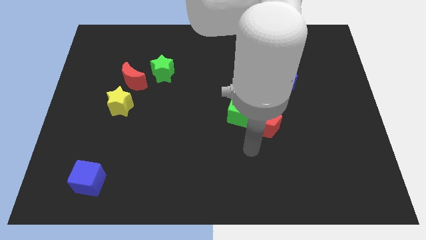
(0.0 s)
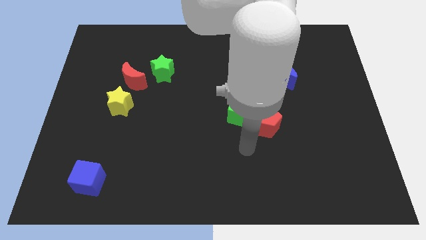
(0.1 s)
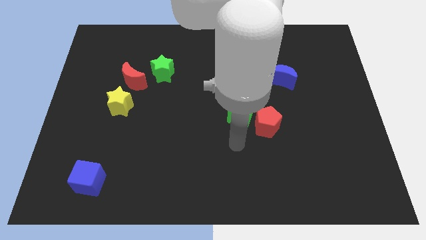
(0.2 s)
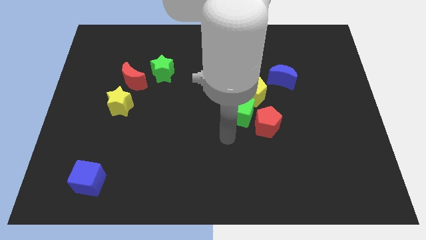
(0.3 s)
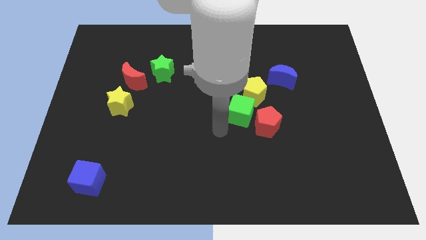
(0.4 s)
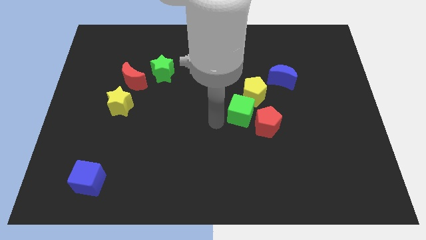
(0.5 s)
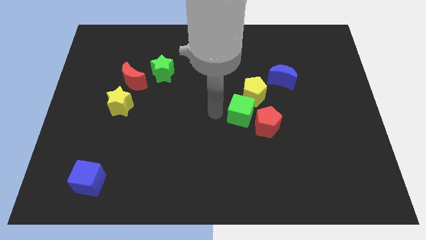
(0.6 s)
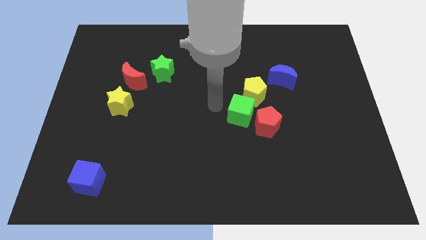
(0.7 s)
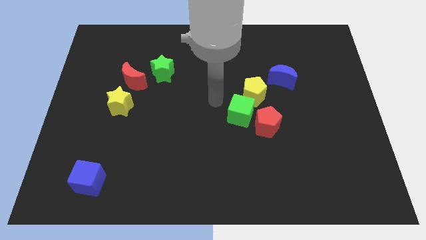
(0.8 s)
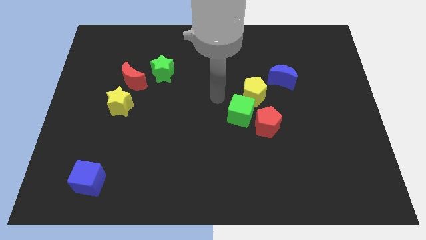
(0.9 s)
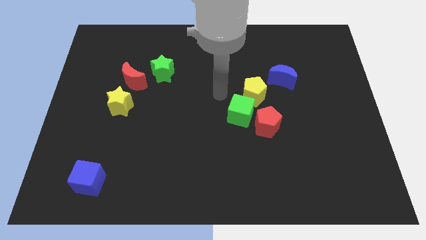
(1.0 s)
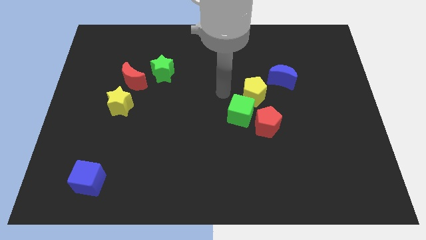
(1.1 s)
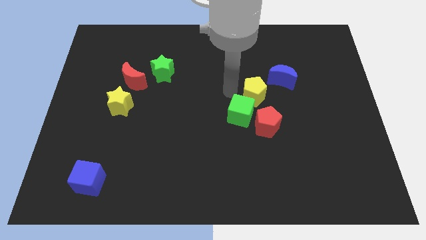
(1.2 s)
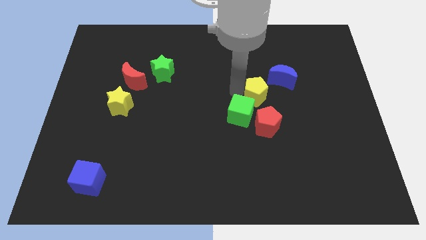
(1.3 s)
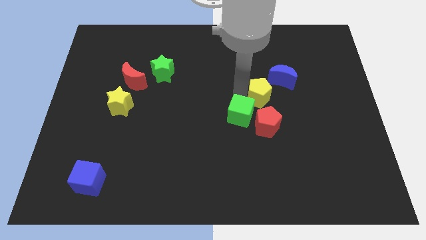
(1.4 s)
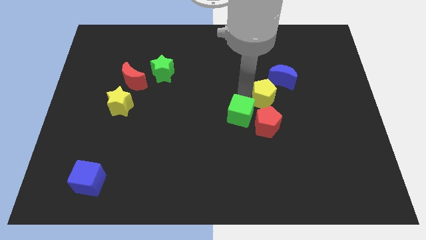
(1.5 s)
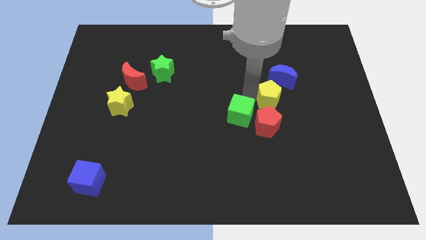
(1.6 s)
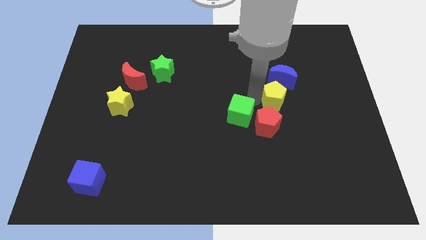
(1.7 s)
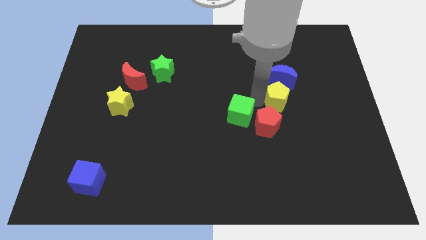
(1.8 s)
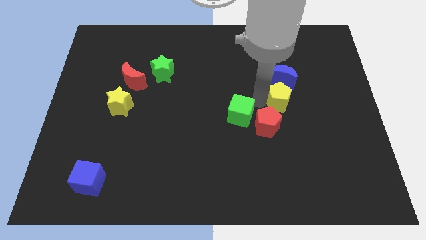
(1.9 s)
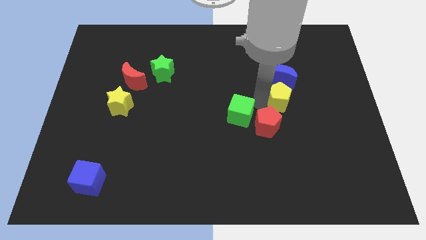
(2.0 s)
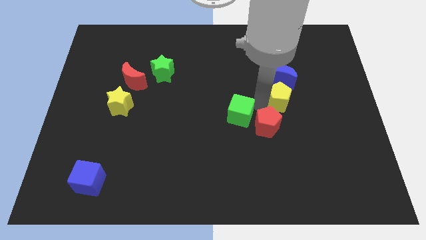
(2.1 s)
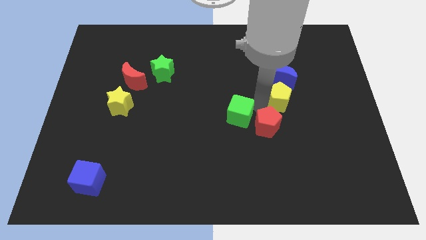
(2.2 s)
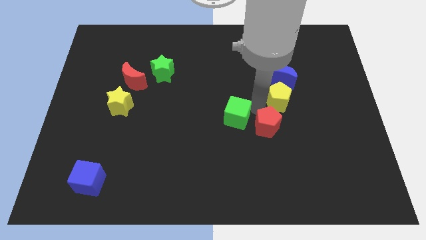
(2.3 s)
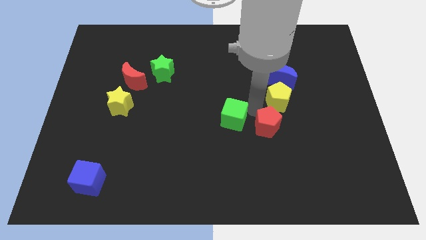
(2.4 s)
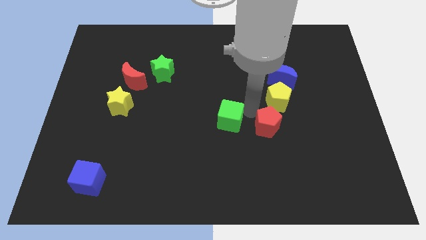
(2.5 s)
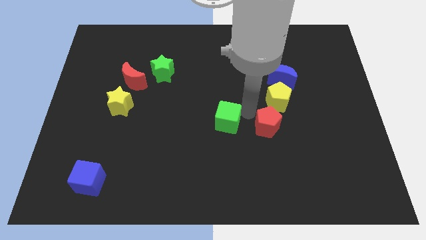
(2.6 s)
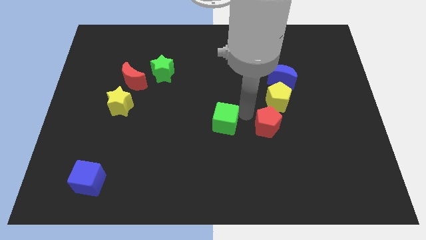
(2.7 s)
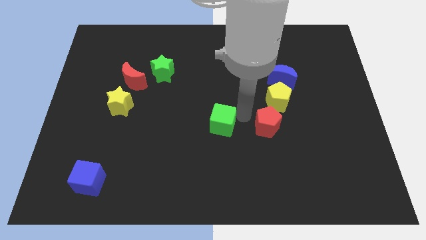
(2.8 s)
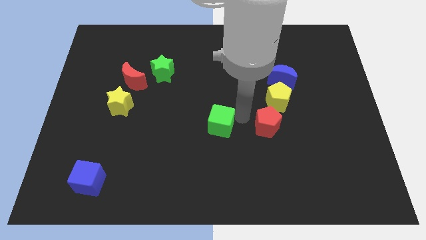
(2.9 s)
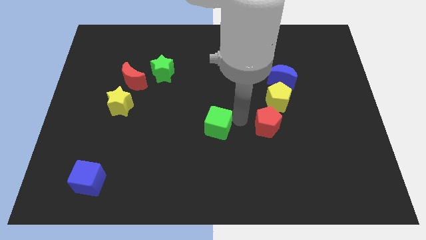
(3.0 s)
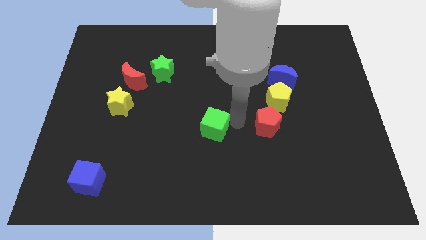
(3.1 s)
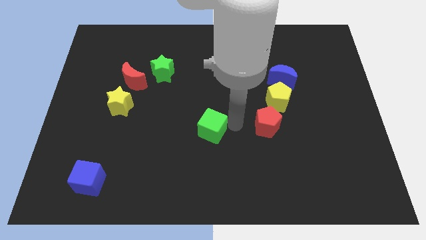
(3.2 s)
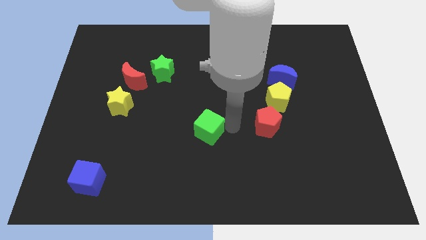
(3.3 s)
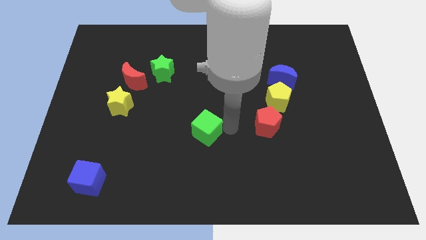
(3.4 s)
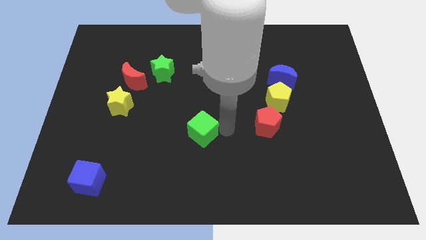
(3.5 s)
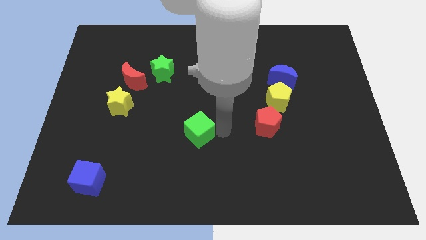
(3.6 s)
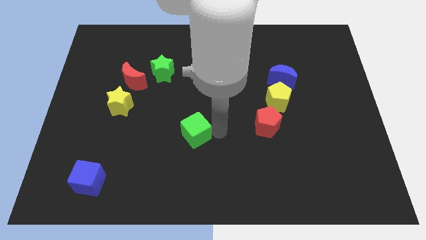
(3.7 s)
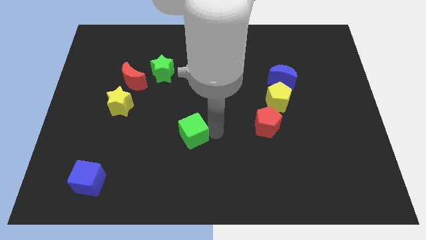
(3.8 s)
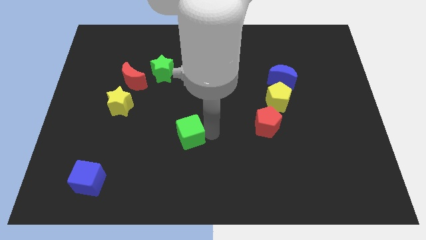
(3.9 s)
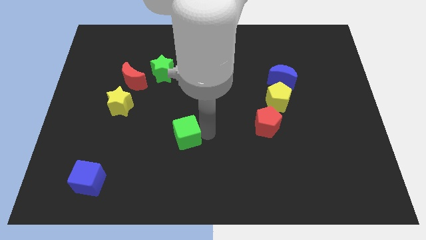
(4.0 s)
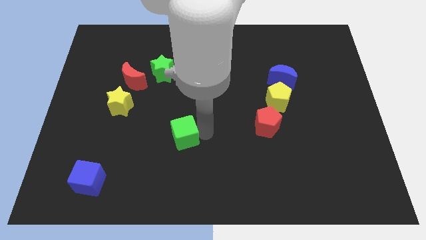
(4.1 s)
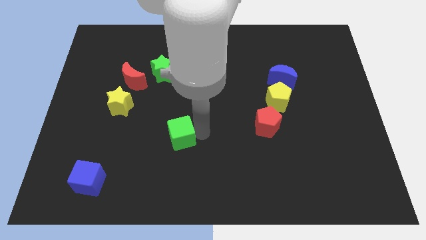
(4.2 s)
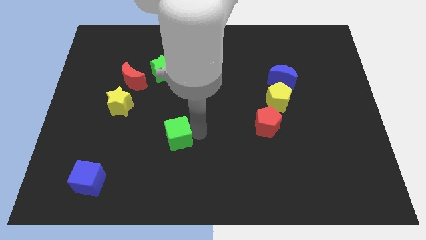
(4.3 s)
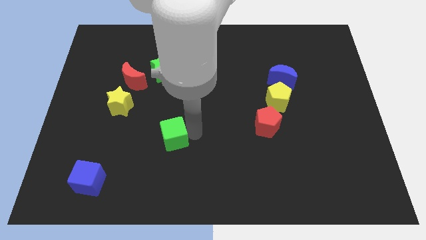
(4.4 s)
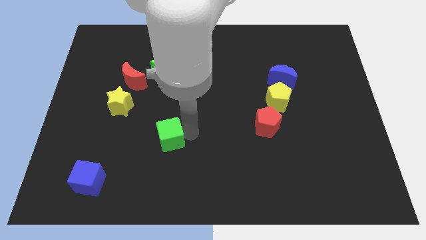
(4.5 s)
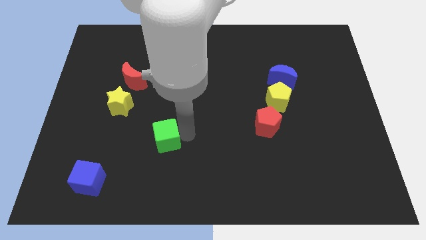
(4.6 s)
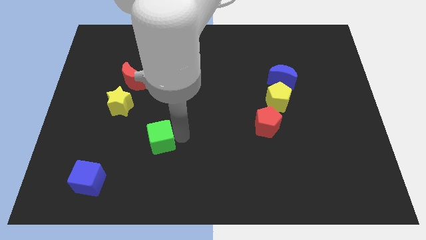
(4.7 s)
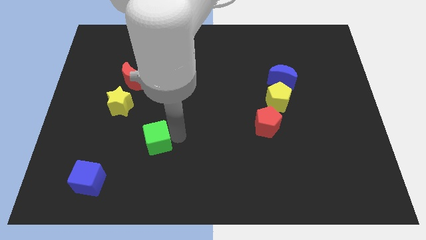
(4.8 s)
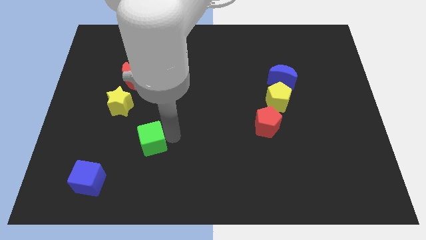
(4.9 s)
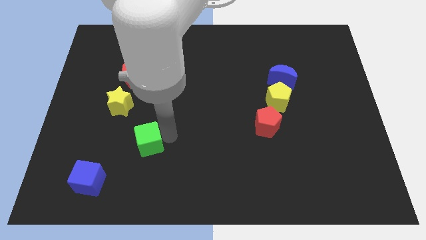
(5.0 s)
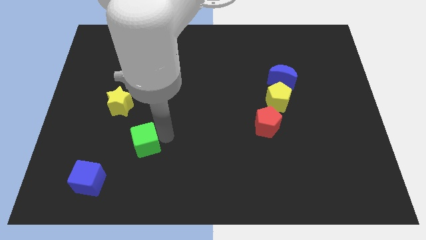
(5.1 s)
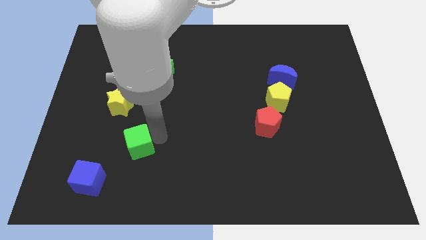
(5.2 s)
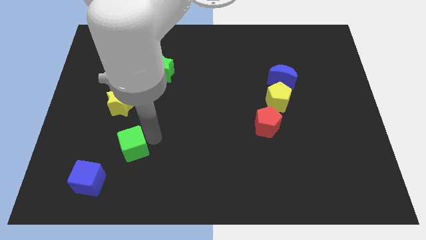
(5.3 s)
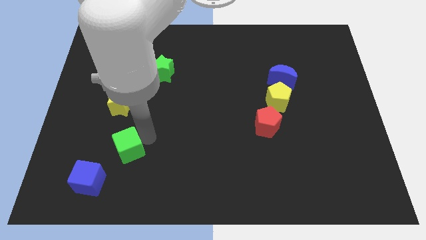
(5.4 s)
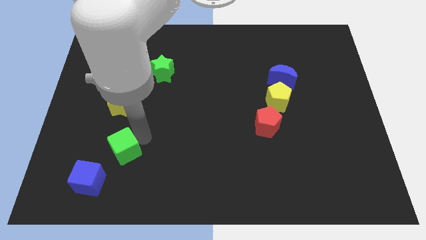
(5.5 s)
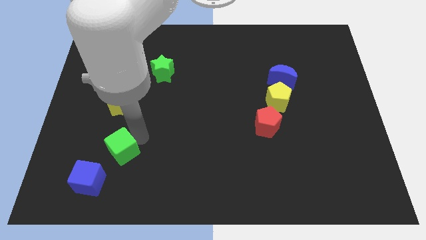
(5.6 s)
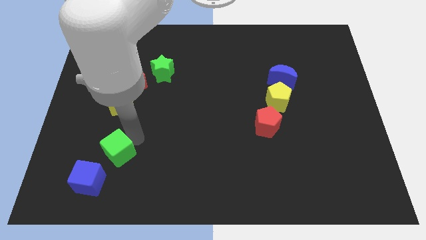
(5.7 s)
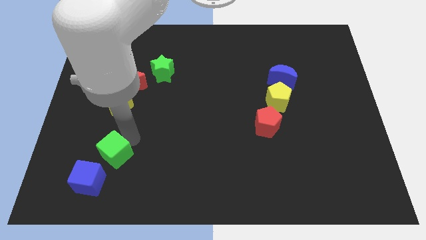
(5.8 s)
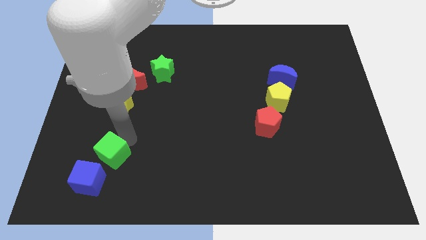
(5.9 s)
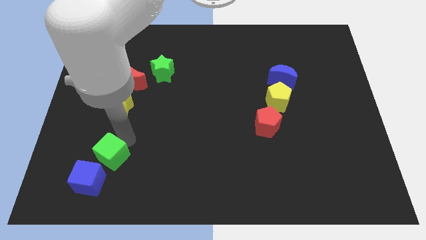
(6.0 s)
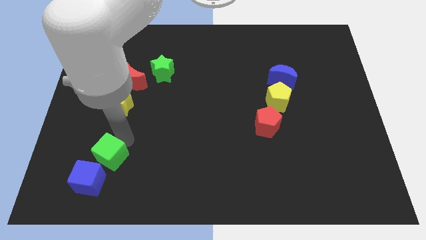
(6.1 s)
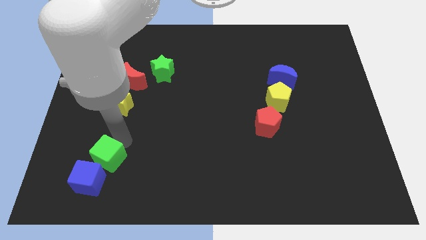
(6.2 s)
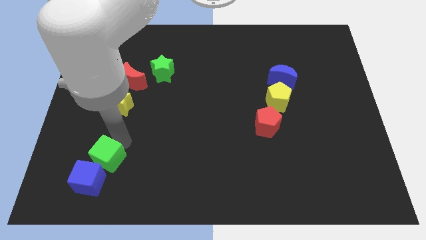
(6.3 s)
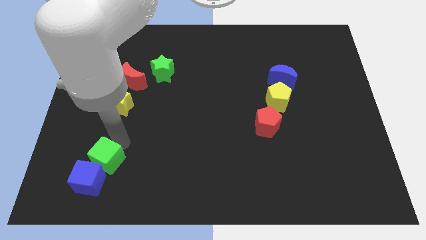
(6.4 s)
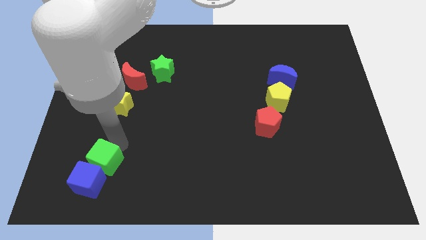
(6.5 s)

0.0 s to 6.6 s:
slide the green cube towards the blue cube

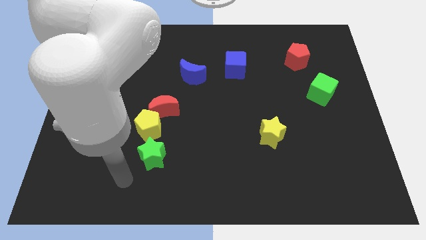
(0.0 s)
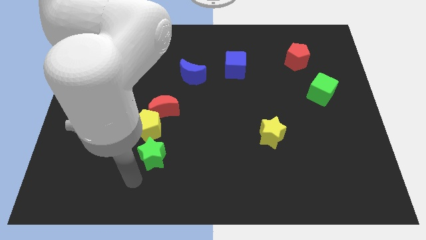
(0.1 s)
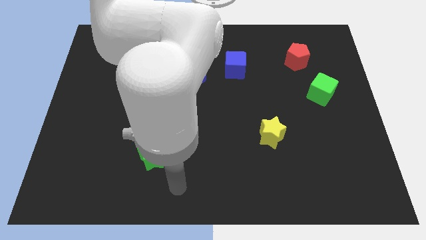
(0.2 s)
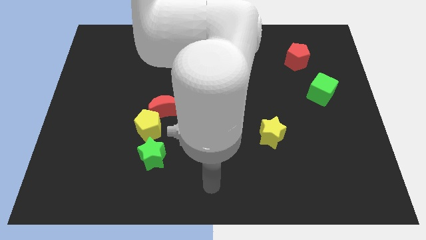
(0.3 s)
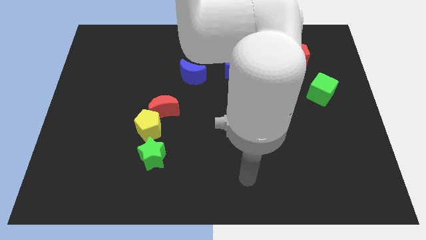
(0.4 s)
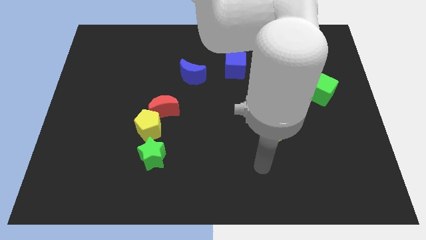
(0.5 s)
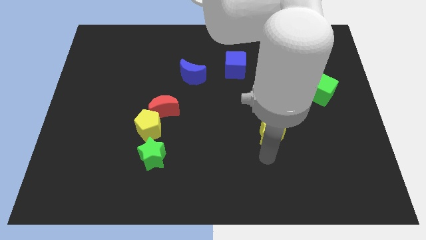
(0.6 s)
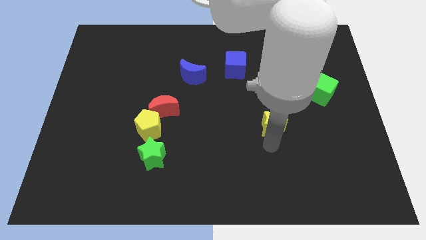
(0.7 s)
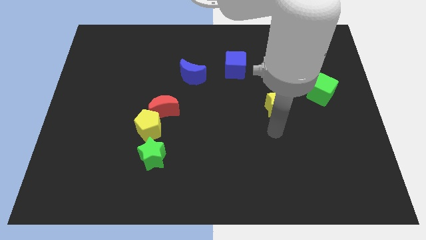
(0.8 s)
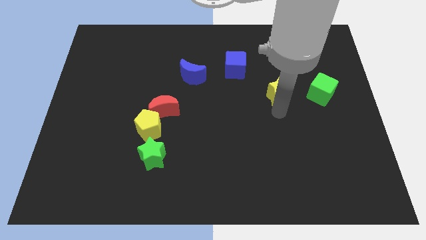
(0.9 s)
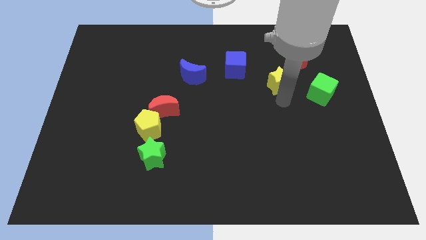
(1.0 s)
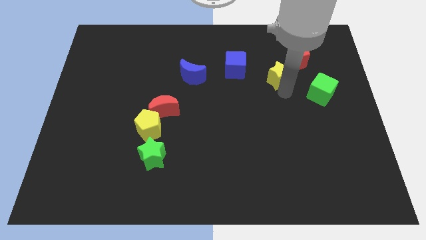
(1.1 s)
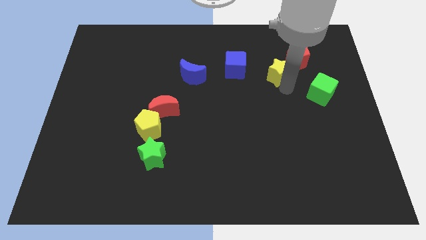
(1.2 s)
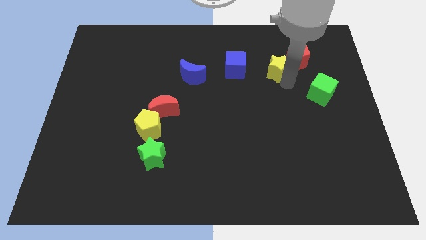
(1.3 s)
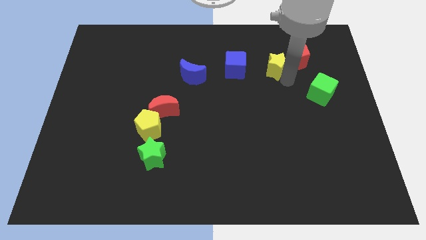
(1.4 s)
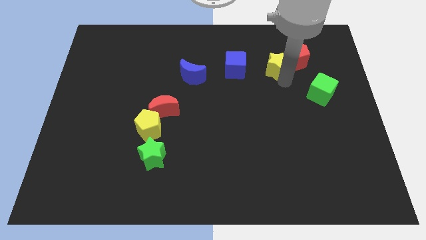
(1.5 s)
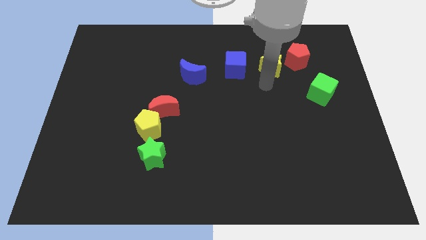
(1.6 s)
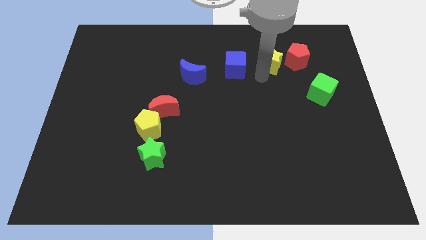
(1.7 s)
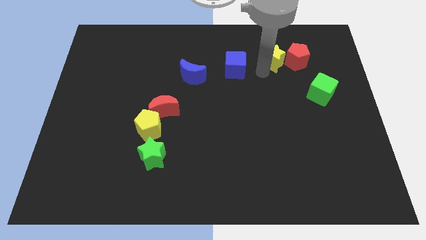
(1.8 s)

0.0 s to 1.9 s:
push the yellow star to the red pentagon

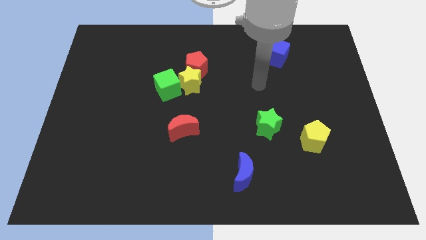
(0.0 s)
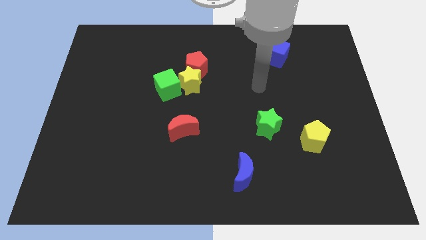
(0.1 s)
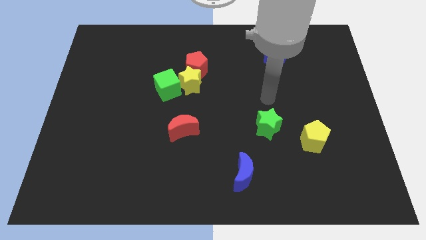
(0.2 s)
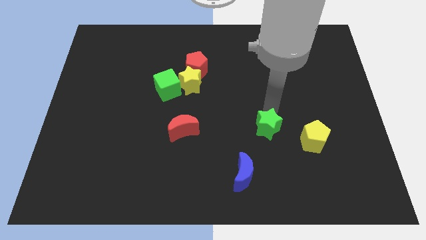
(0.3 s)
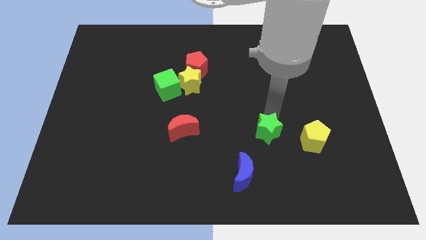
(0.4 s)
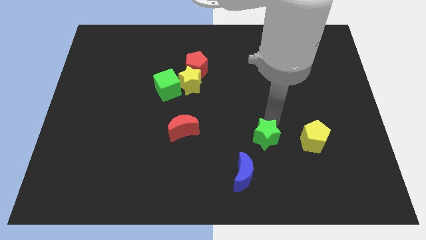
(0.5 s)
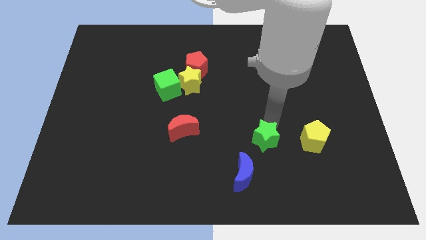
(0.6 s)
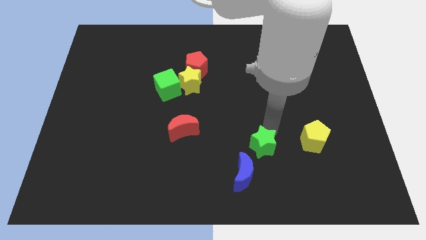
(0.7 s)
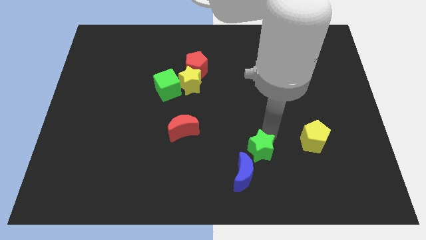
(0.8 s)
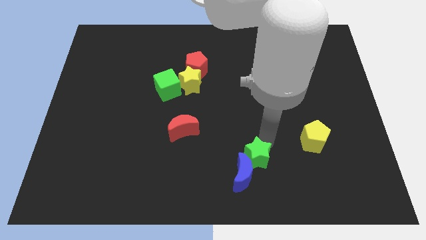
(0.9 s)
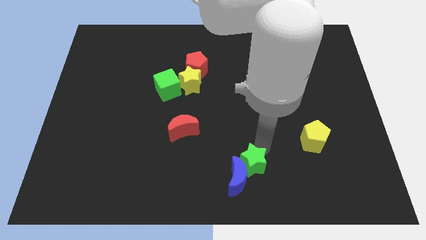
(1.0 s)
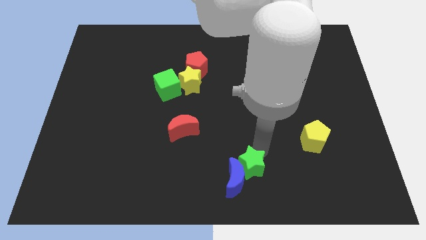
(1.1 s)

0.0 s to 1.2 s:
put the green star close to the blue moon
